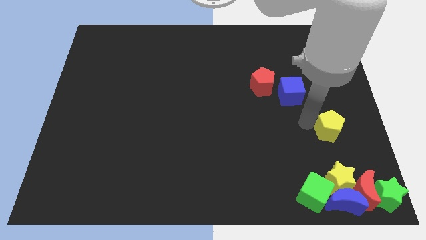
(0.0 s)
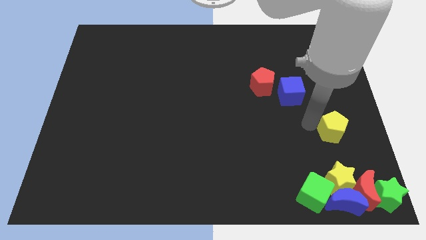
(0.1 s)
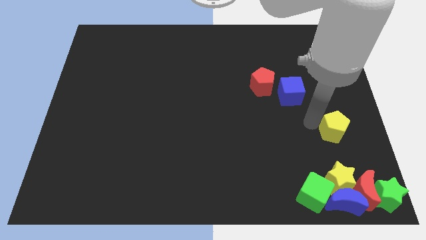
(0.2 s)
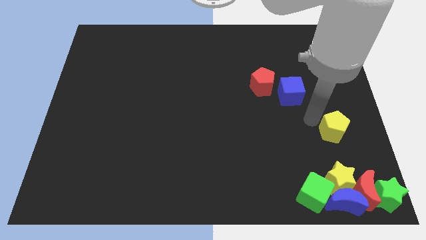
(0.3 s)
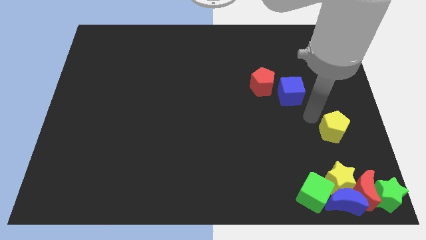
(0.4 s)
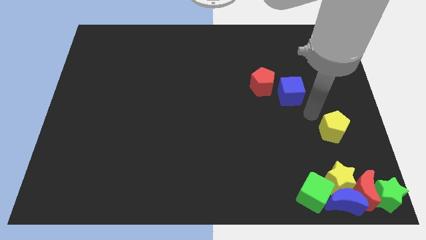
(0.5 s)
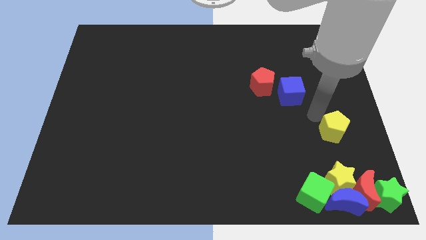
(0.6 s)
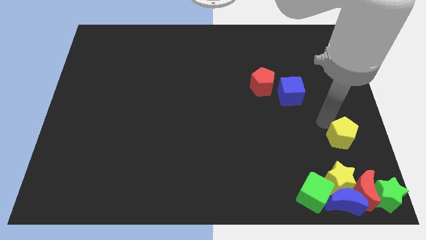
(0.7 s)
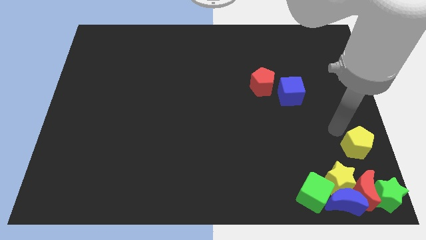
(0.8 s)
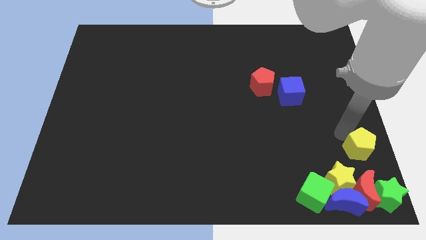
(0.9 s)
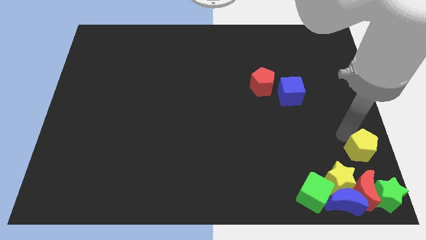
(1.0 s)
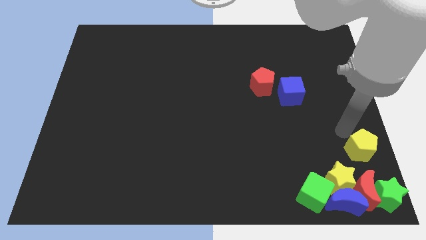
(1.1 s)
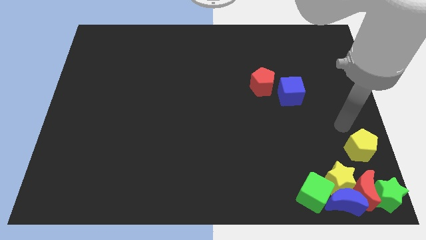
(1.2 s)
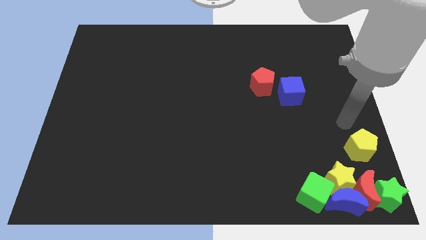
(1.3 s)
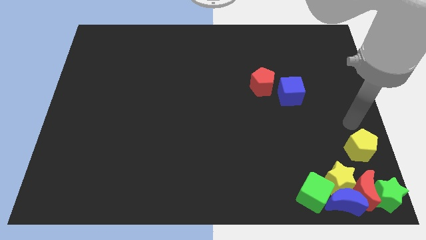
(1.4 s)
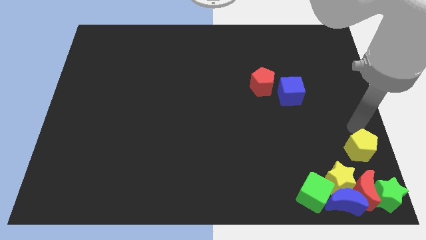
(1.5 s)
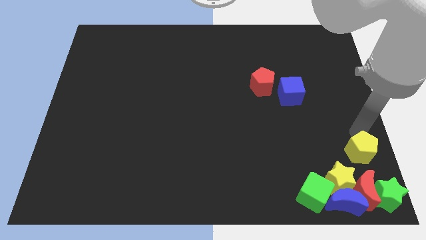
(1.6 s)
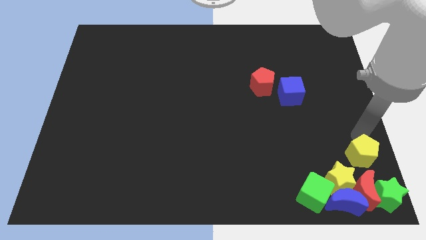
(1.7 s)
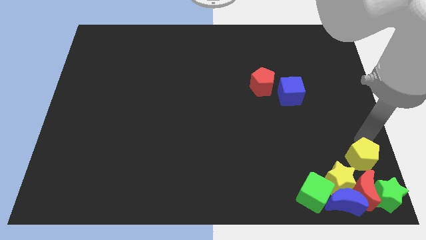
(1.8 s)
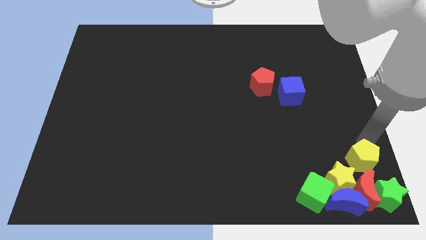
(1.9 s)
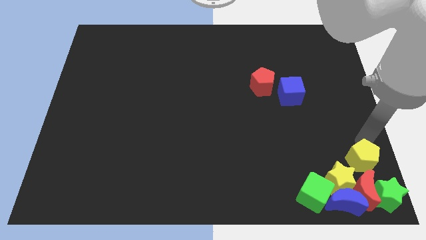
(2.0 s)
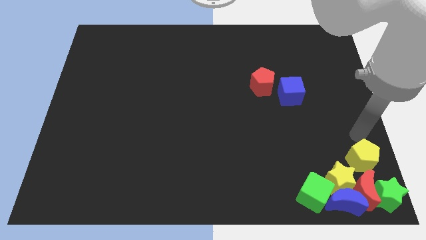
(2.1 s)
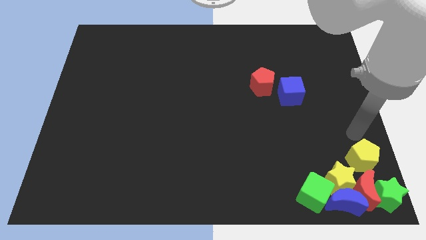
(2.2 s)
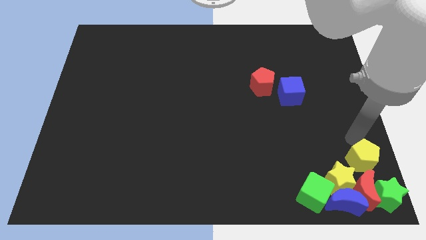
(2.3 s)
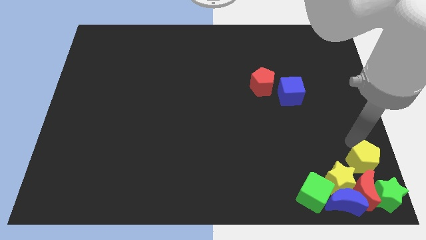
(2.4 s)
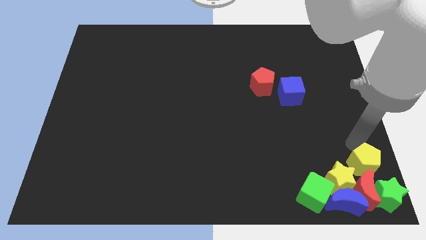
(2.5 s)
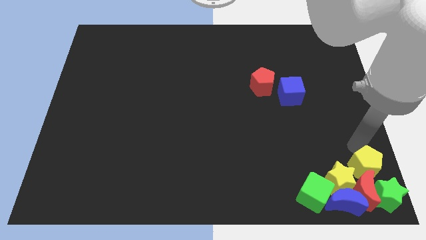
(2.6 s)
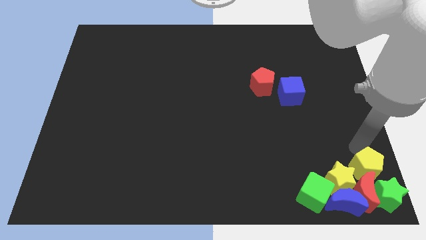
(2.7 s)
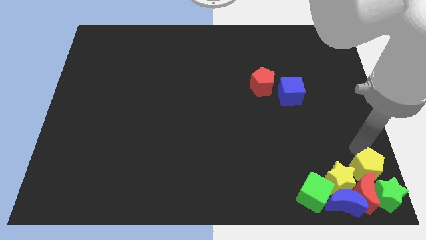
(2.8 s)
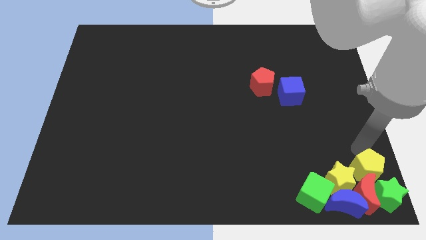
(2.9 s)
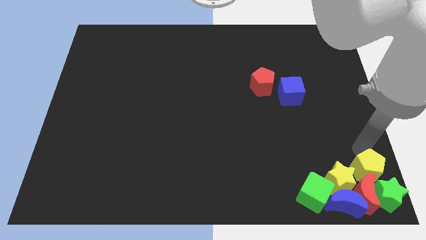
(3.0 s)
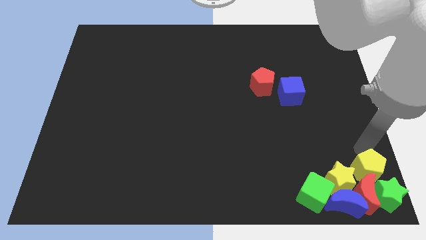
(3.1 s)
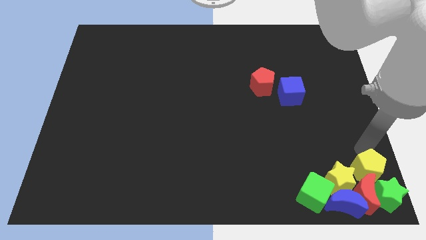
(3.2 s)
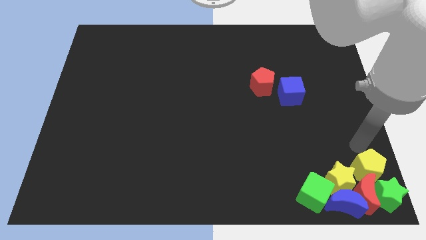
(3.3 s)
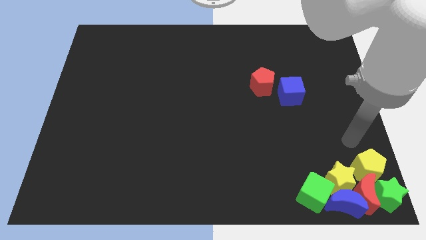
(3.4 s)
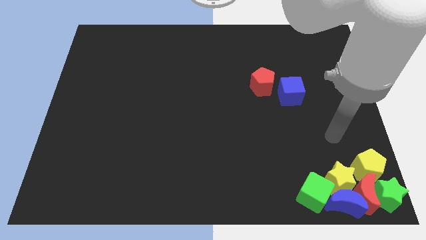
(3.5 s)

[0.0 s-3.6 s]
push the yellow pentagon into the red crescent

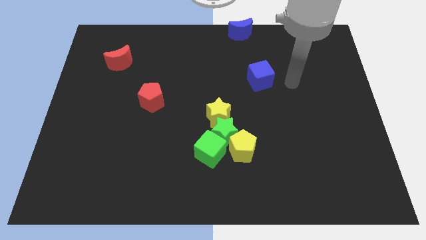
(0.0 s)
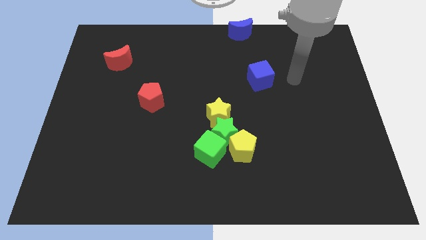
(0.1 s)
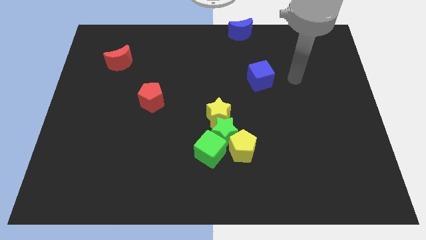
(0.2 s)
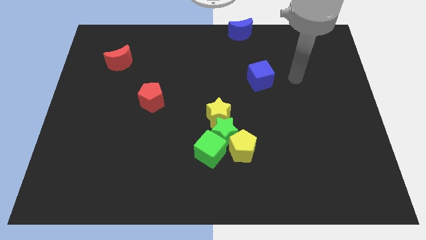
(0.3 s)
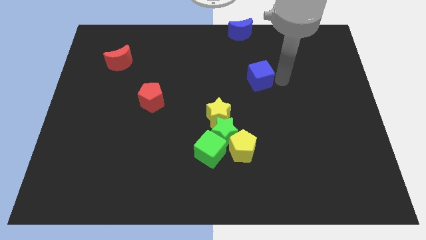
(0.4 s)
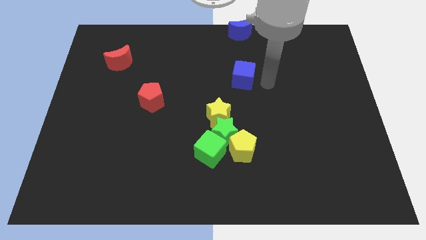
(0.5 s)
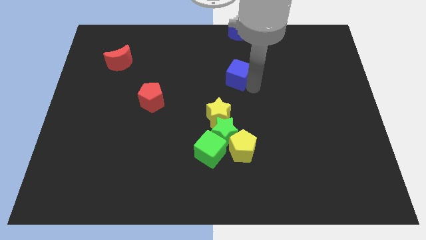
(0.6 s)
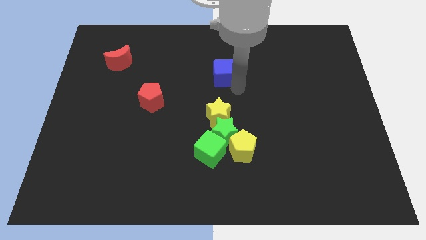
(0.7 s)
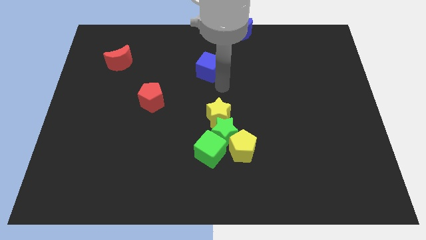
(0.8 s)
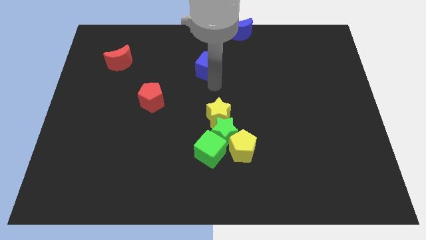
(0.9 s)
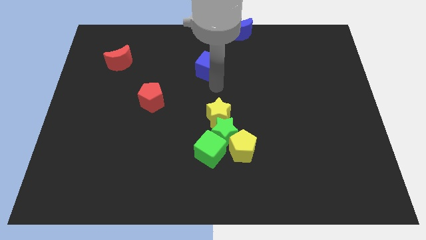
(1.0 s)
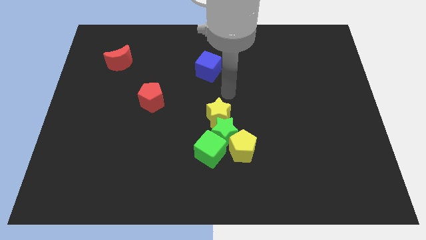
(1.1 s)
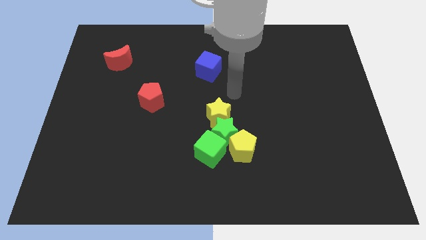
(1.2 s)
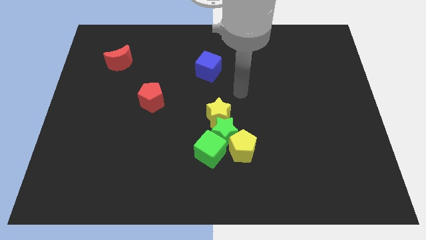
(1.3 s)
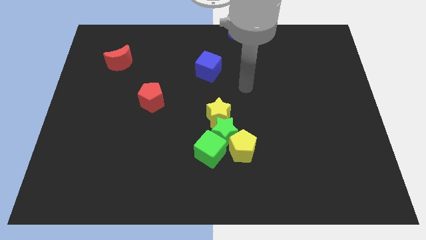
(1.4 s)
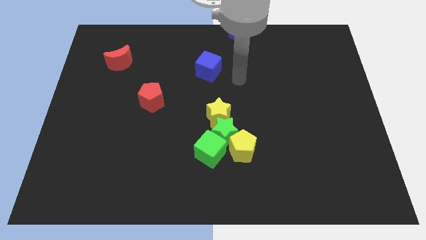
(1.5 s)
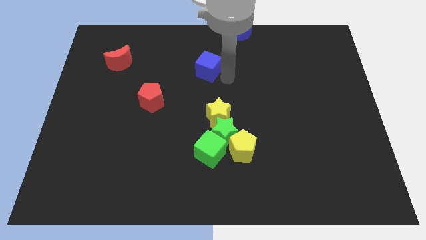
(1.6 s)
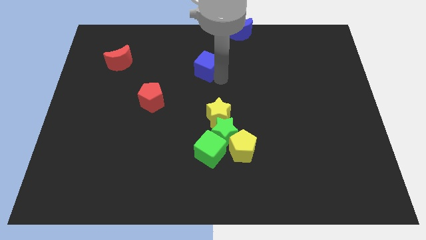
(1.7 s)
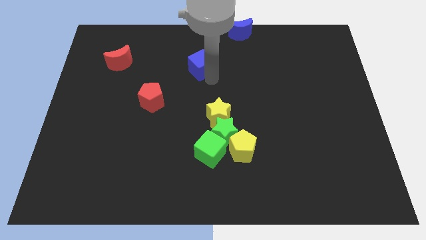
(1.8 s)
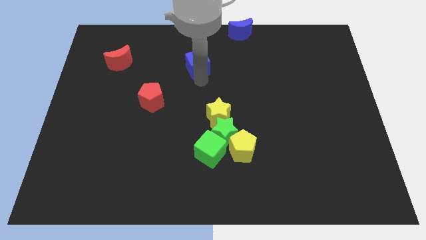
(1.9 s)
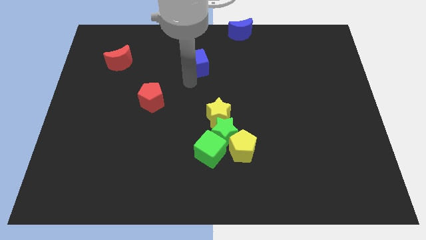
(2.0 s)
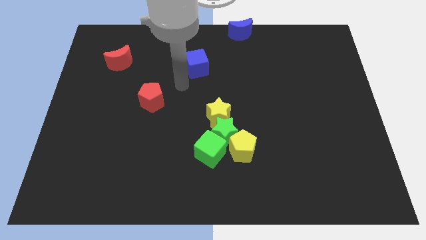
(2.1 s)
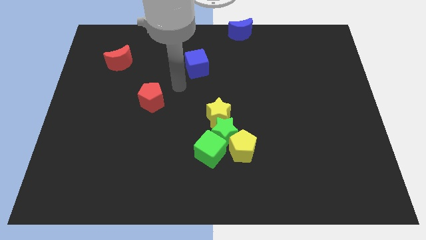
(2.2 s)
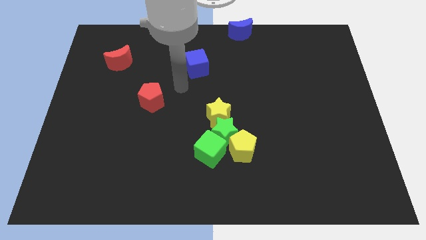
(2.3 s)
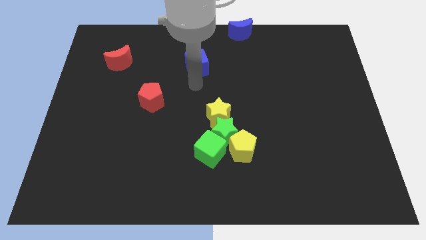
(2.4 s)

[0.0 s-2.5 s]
place the blue cube between the red pentagon and blue moon

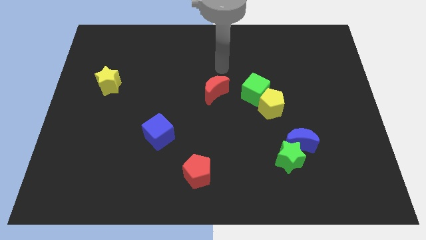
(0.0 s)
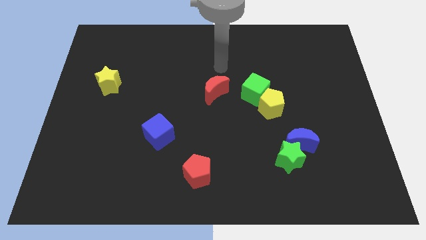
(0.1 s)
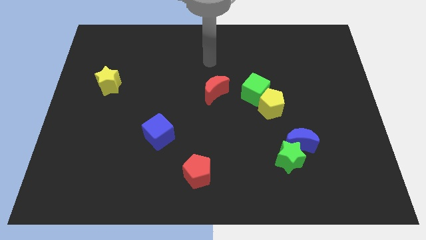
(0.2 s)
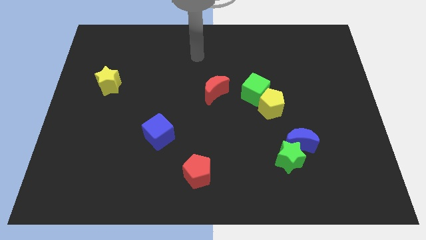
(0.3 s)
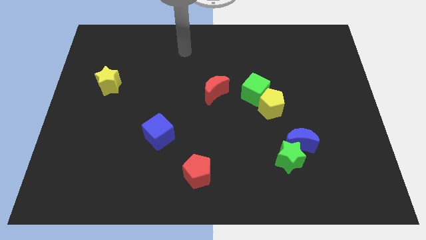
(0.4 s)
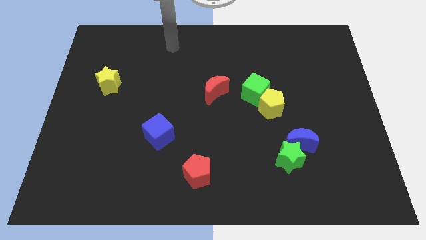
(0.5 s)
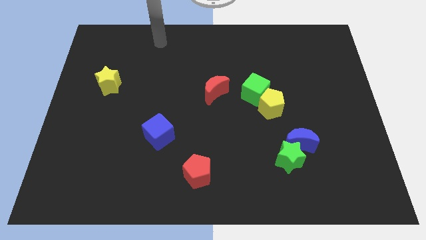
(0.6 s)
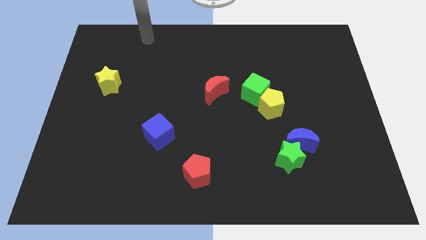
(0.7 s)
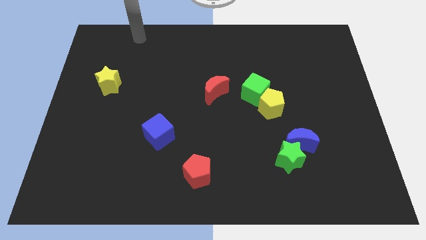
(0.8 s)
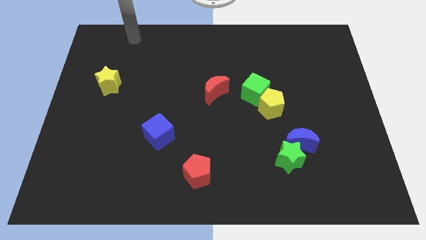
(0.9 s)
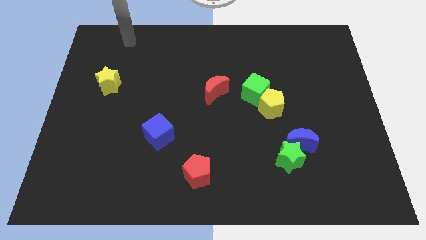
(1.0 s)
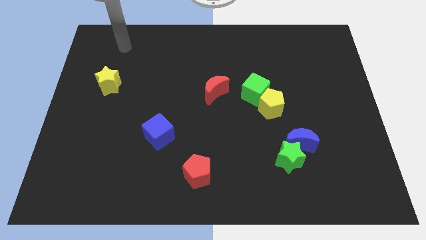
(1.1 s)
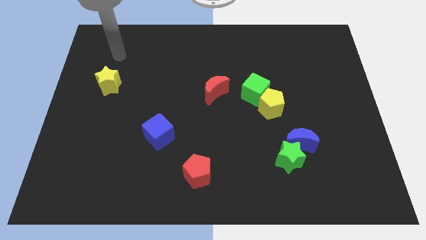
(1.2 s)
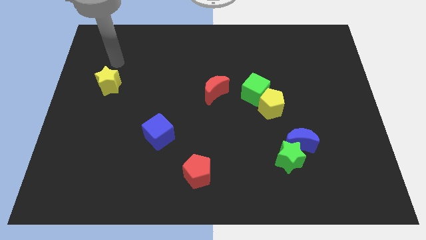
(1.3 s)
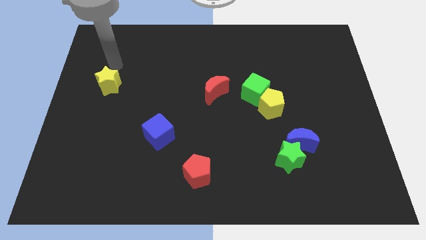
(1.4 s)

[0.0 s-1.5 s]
point your arm at the top of the yellow star

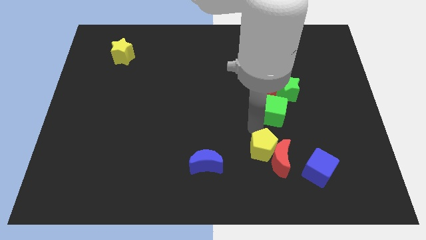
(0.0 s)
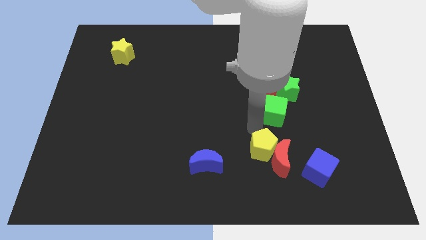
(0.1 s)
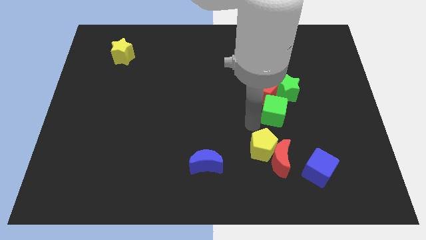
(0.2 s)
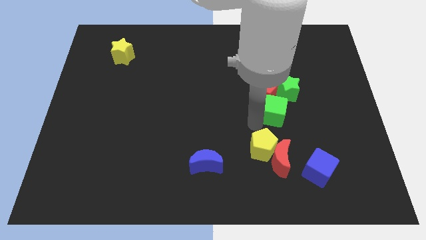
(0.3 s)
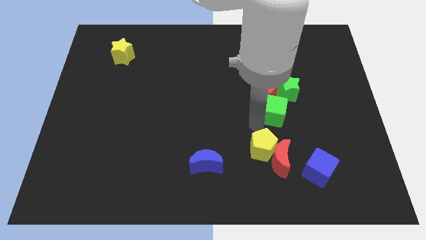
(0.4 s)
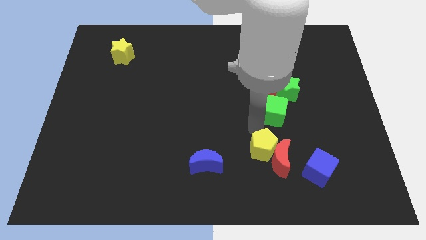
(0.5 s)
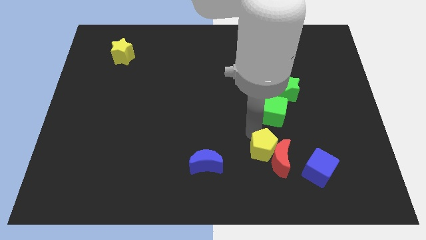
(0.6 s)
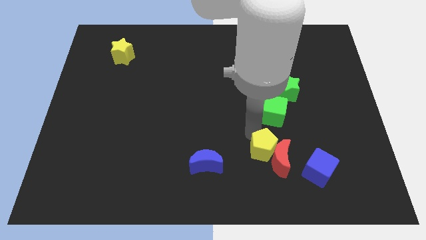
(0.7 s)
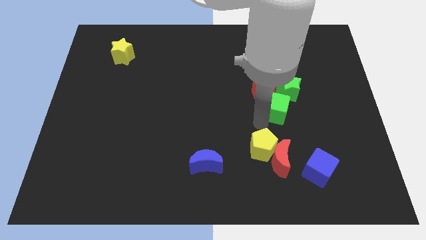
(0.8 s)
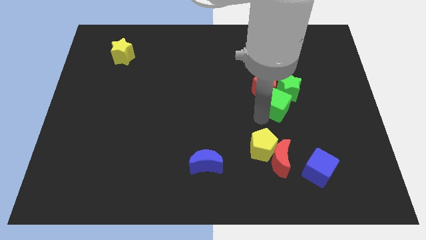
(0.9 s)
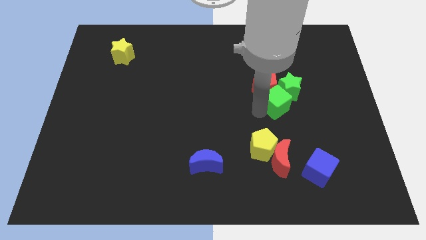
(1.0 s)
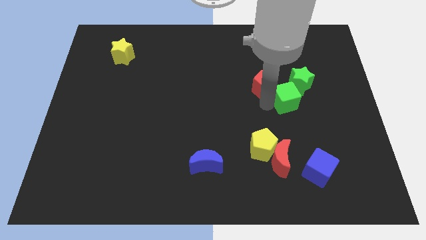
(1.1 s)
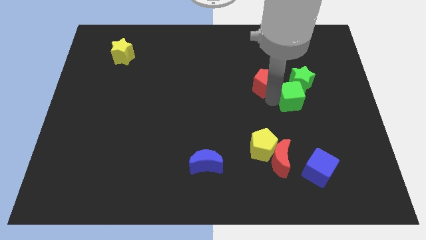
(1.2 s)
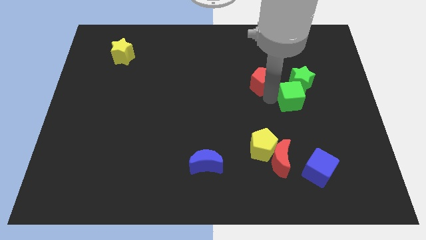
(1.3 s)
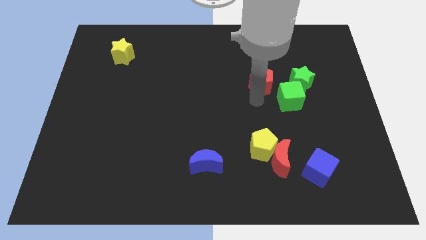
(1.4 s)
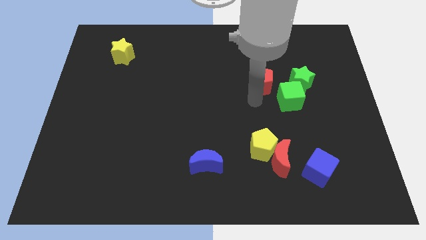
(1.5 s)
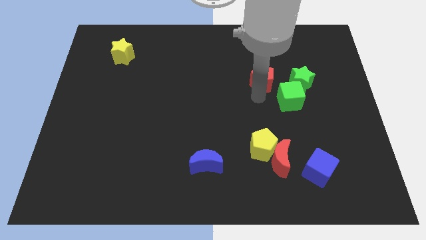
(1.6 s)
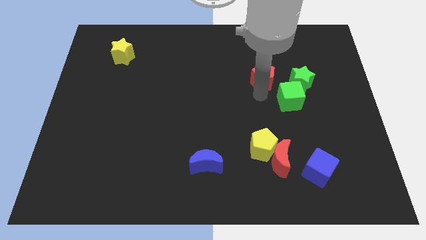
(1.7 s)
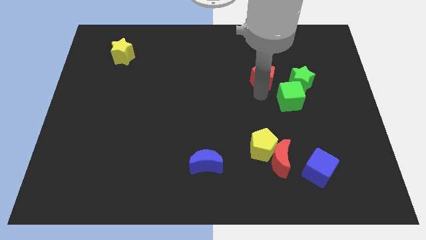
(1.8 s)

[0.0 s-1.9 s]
separate the red pentagon and the green cube
